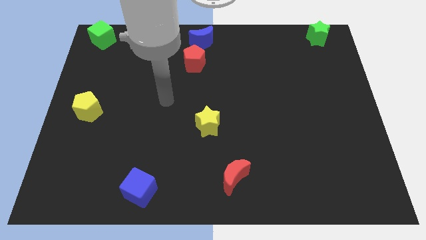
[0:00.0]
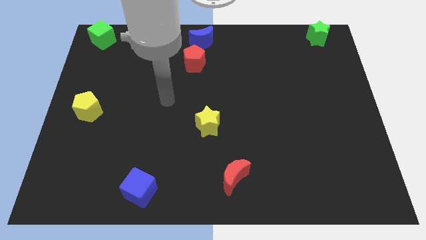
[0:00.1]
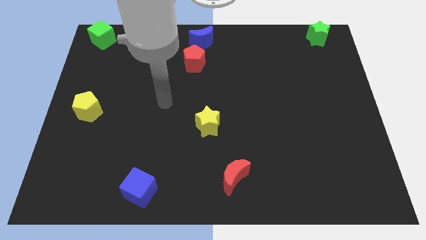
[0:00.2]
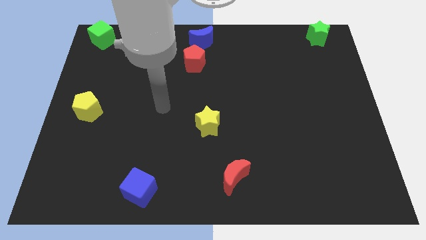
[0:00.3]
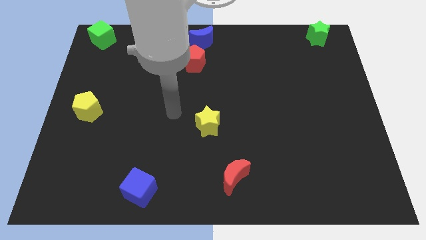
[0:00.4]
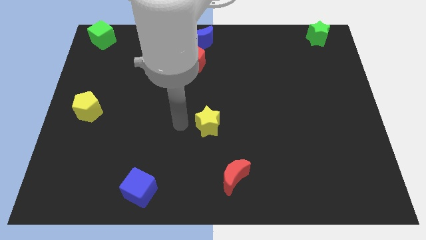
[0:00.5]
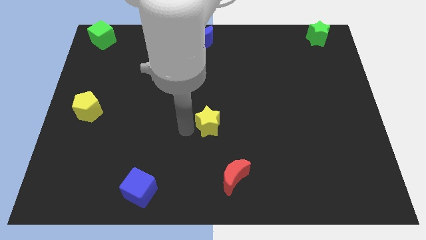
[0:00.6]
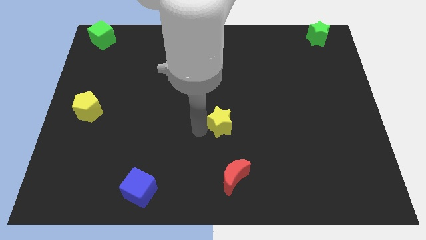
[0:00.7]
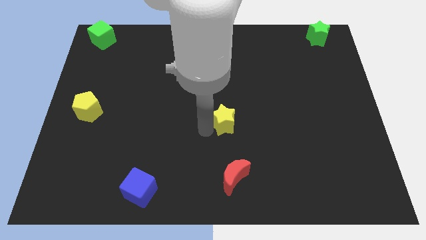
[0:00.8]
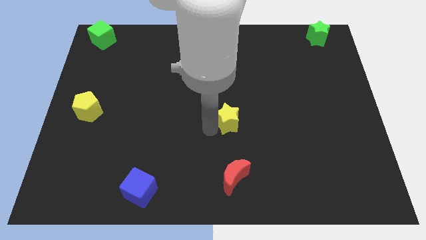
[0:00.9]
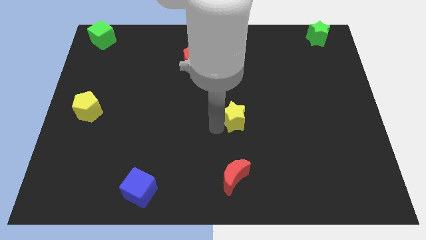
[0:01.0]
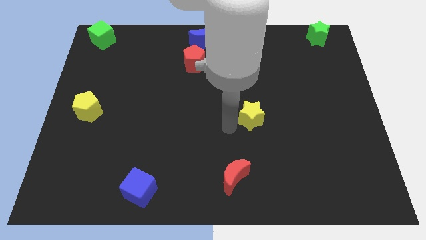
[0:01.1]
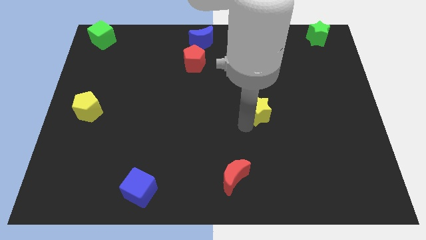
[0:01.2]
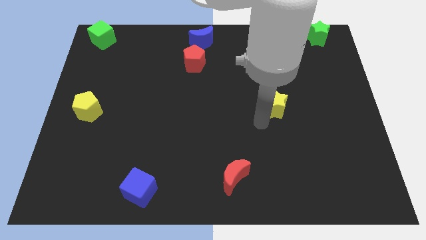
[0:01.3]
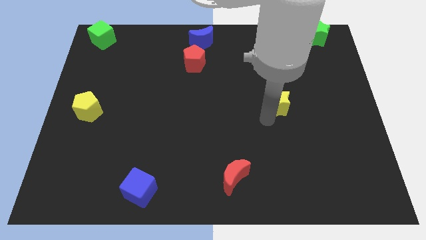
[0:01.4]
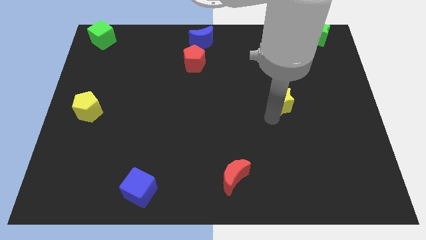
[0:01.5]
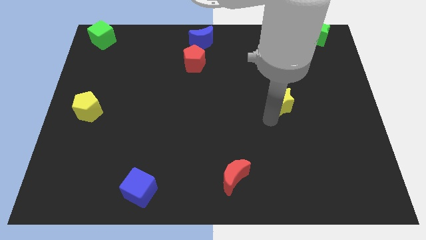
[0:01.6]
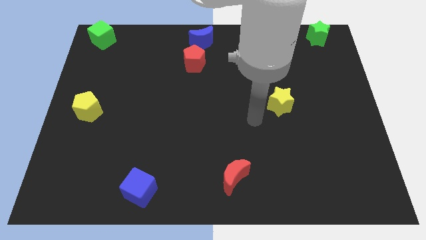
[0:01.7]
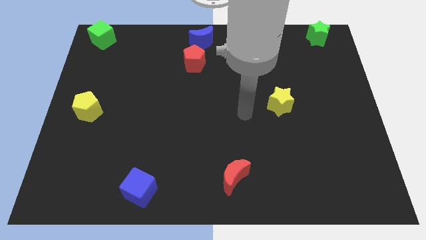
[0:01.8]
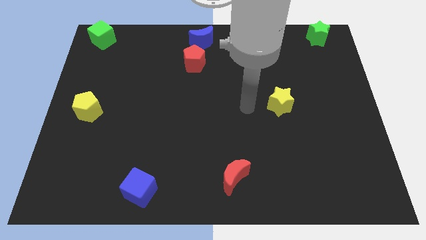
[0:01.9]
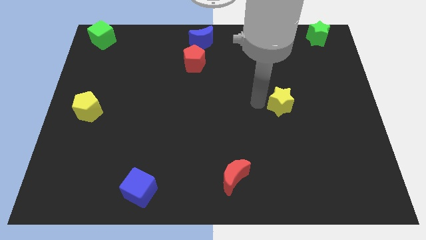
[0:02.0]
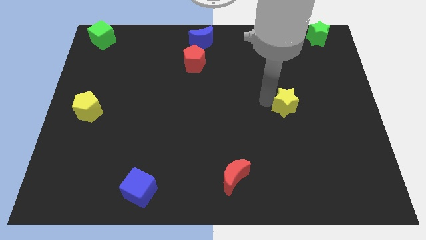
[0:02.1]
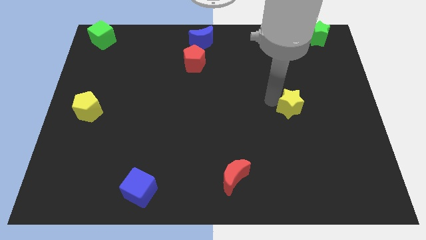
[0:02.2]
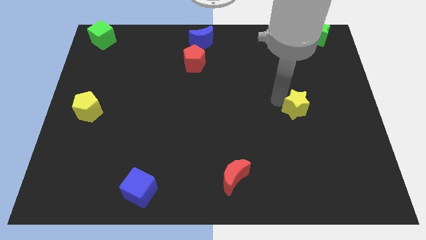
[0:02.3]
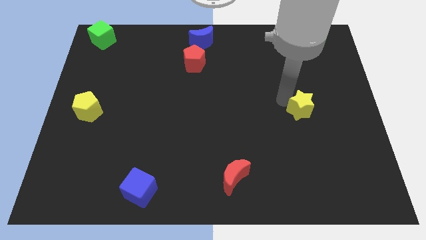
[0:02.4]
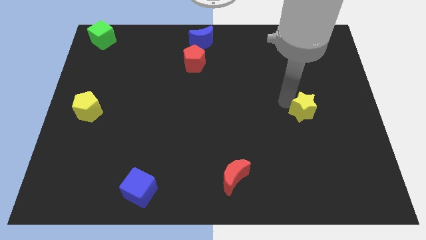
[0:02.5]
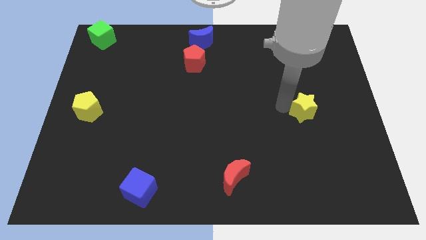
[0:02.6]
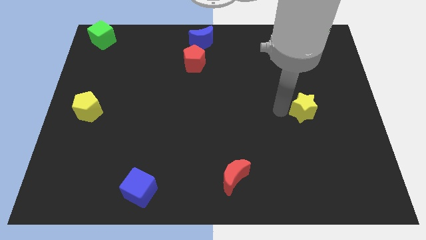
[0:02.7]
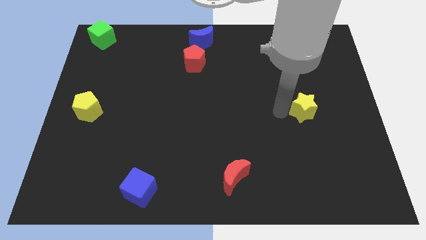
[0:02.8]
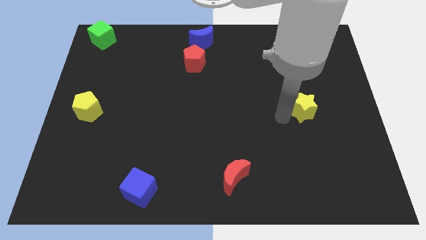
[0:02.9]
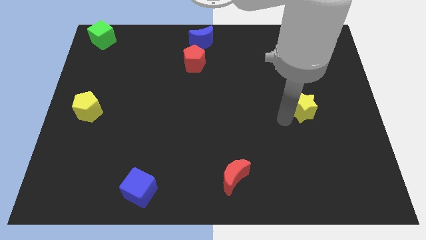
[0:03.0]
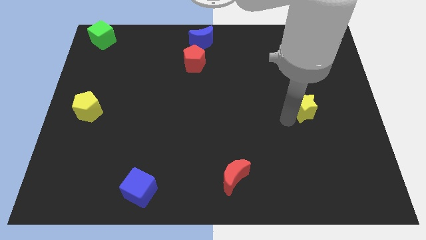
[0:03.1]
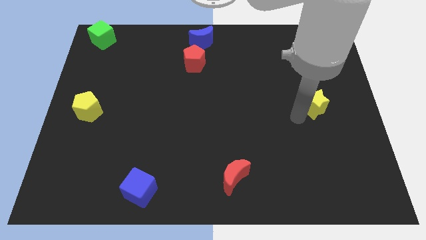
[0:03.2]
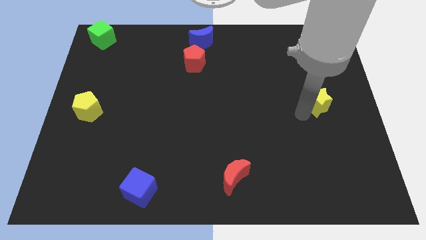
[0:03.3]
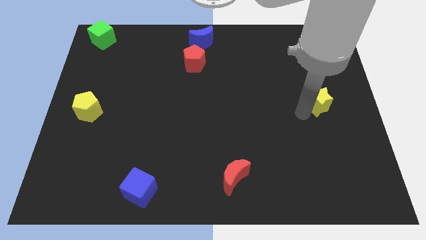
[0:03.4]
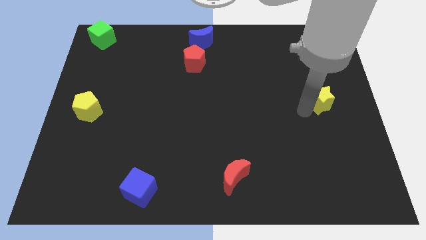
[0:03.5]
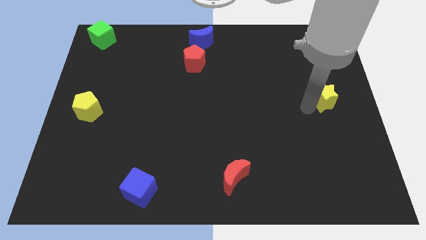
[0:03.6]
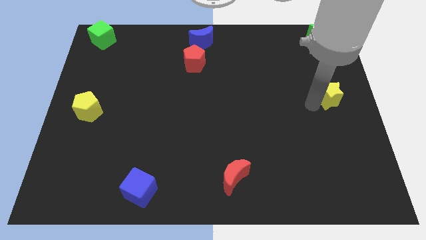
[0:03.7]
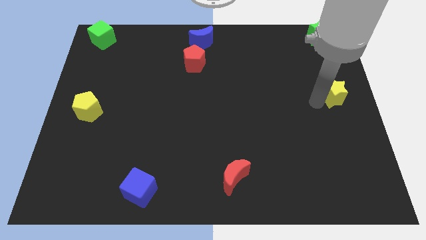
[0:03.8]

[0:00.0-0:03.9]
put the yellow star vertically below the green star

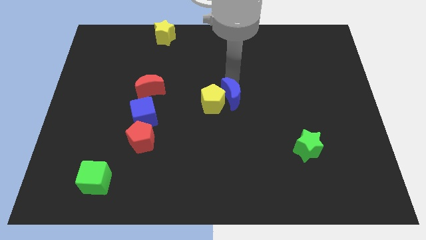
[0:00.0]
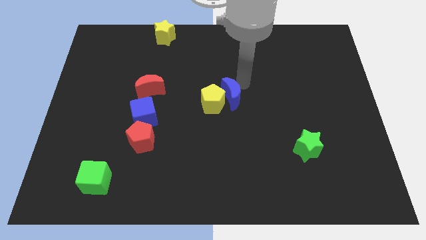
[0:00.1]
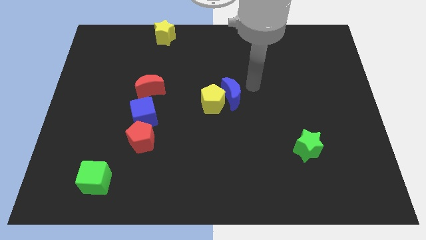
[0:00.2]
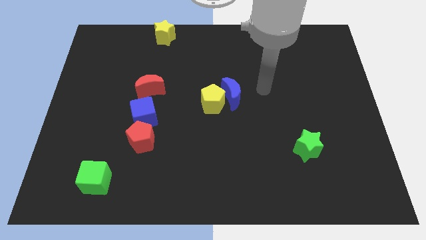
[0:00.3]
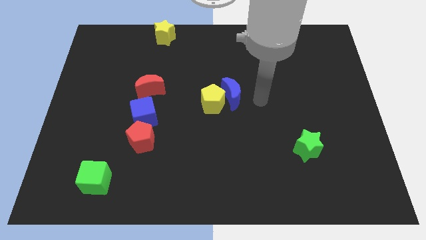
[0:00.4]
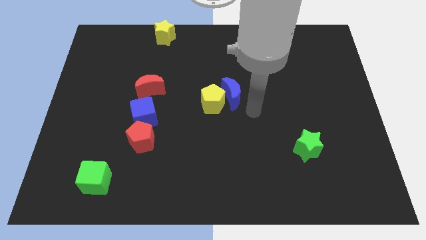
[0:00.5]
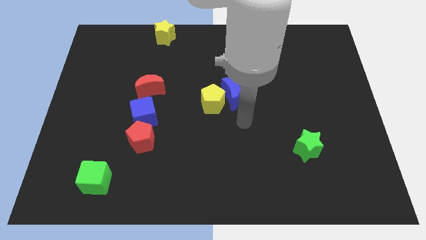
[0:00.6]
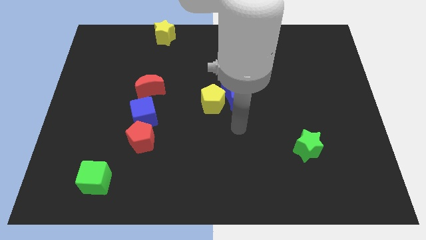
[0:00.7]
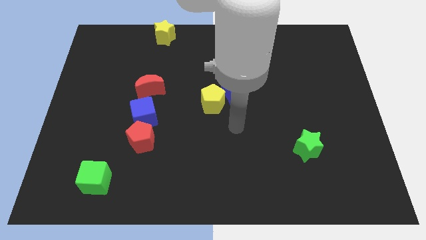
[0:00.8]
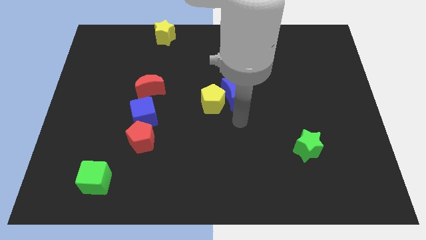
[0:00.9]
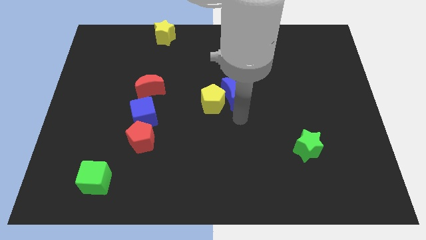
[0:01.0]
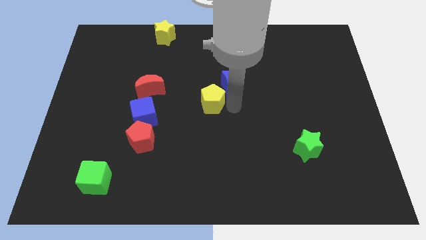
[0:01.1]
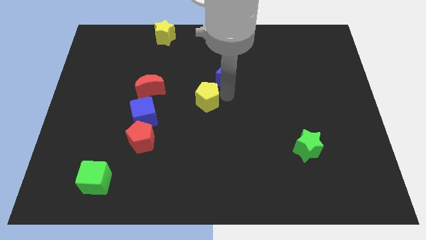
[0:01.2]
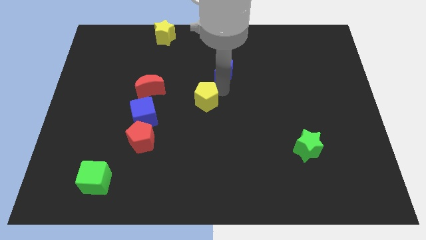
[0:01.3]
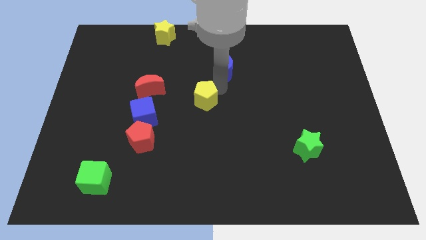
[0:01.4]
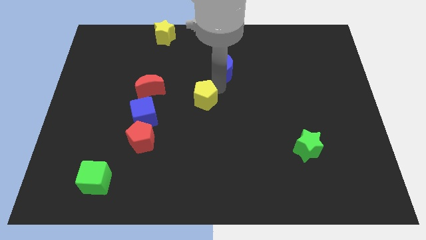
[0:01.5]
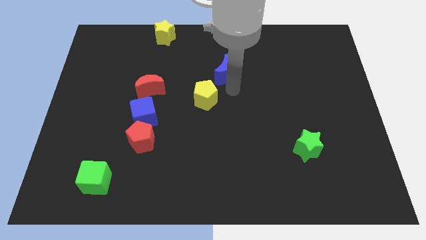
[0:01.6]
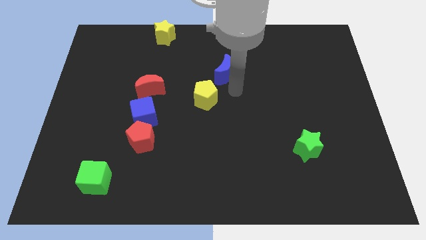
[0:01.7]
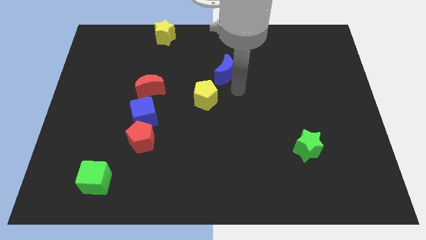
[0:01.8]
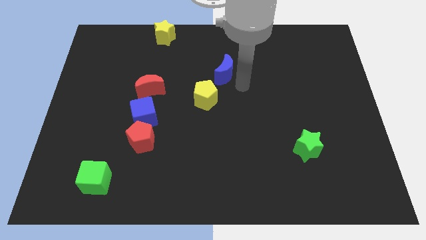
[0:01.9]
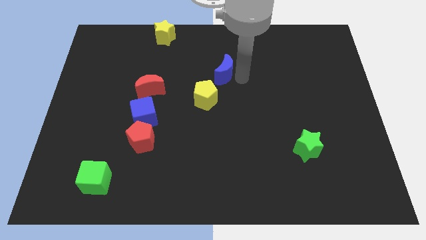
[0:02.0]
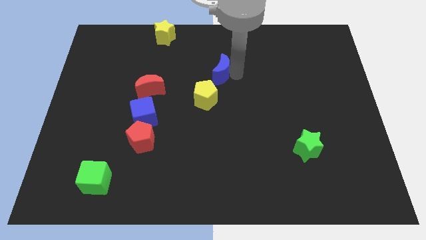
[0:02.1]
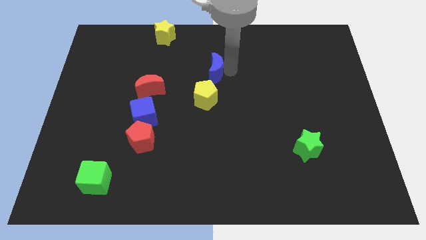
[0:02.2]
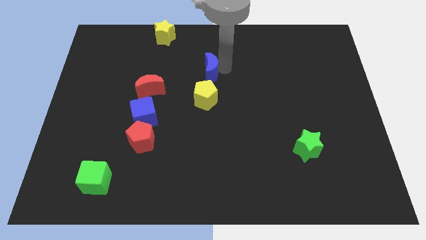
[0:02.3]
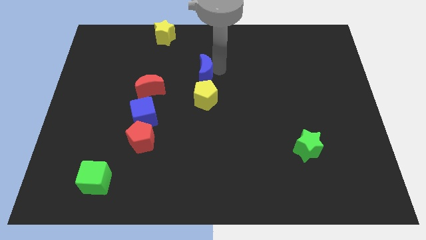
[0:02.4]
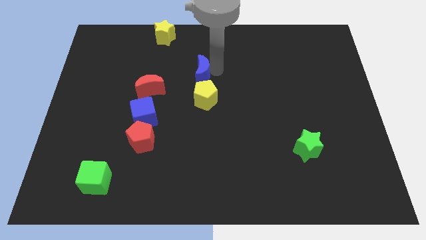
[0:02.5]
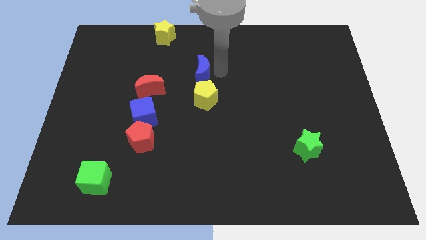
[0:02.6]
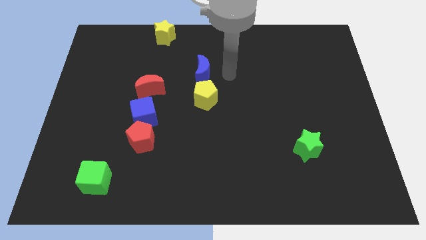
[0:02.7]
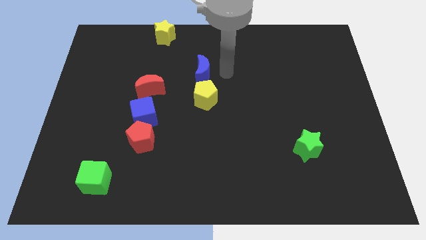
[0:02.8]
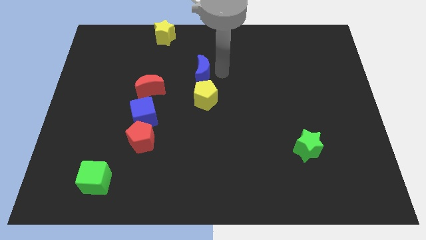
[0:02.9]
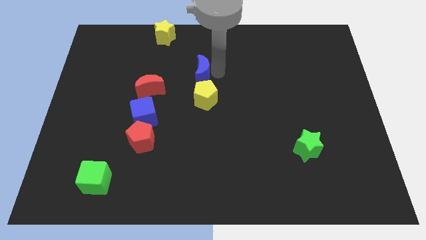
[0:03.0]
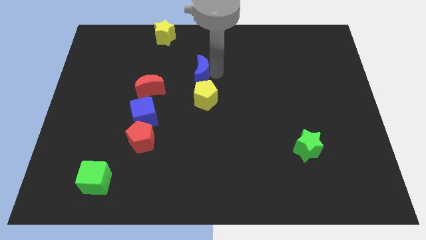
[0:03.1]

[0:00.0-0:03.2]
place the blue moon at the top of the yellow pentagon

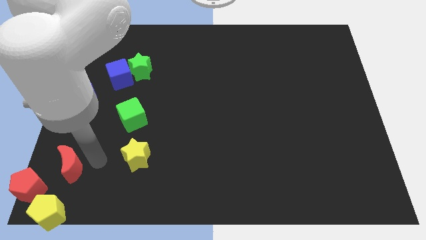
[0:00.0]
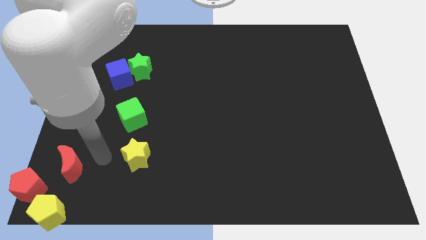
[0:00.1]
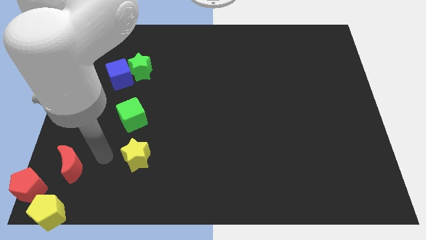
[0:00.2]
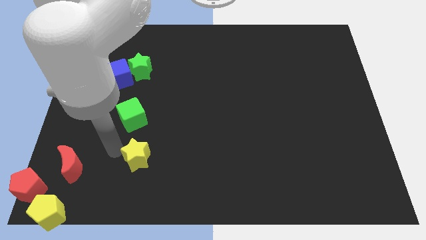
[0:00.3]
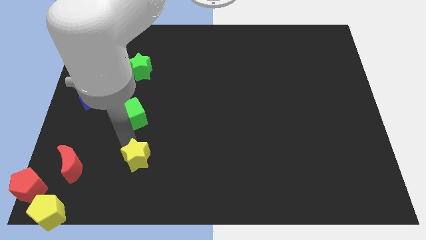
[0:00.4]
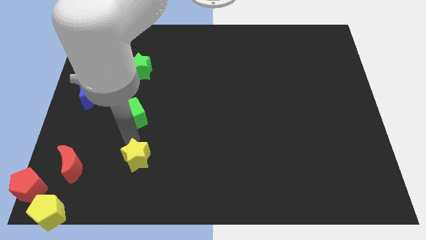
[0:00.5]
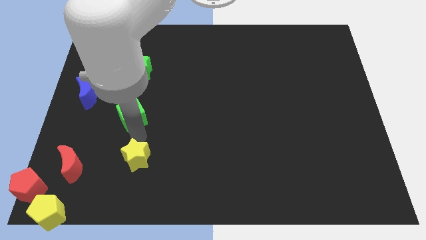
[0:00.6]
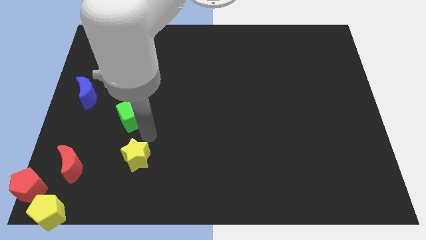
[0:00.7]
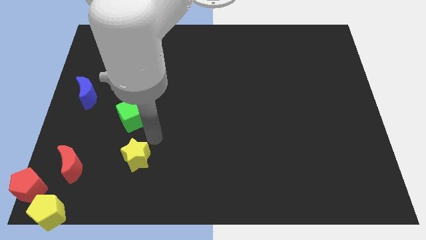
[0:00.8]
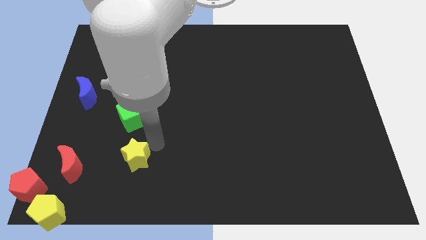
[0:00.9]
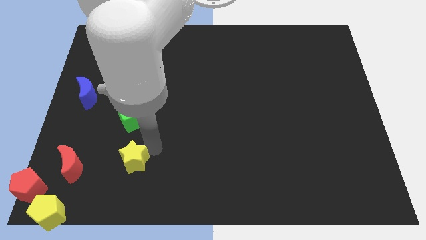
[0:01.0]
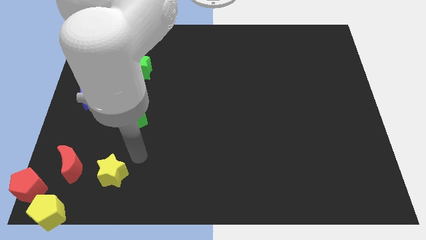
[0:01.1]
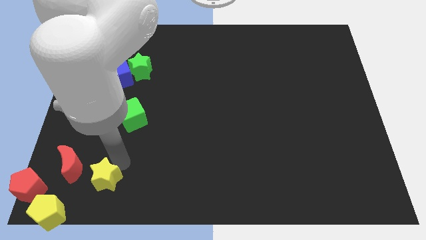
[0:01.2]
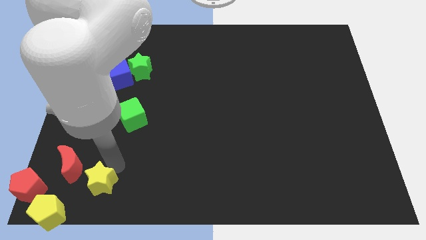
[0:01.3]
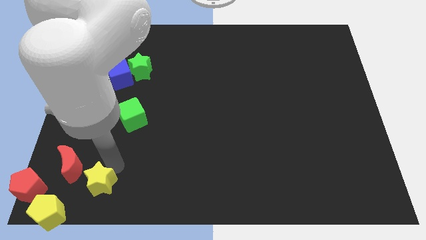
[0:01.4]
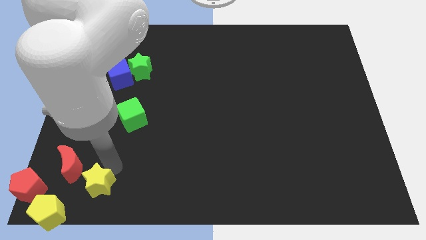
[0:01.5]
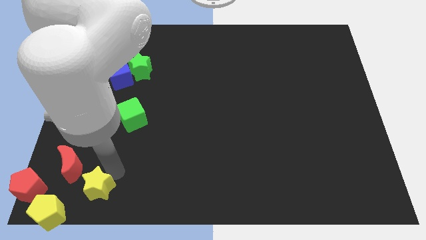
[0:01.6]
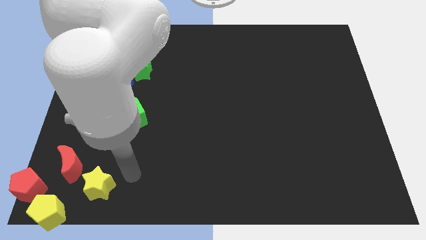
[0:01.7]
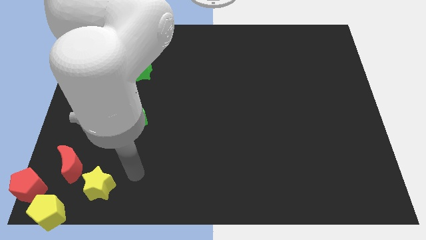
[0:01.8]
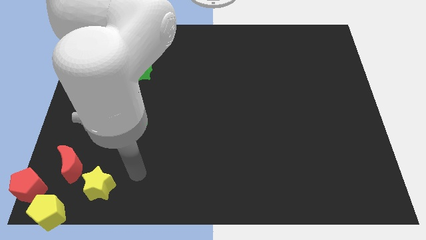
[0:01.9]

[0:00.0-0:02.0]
push the yellow star to the bottom left corner side of the board
